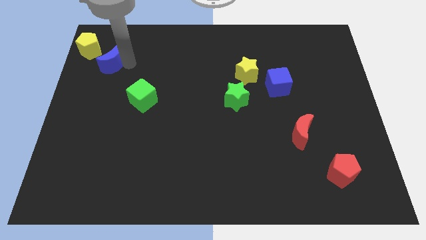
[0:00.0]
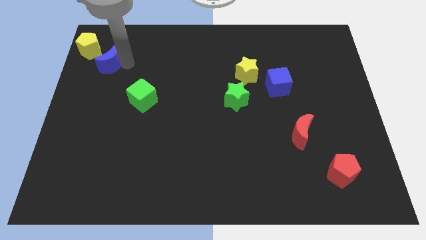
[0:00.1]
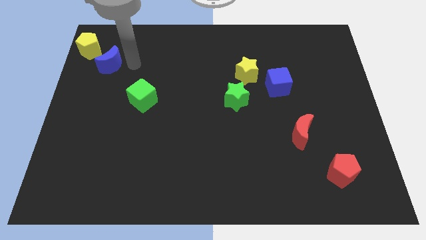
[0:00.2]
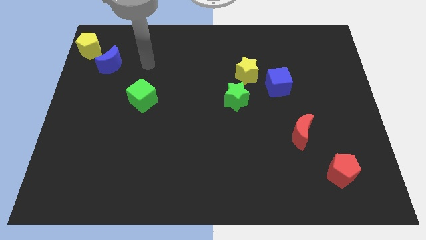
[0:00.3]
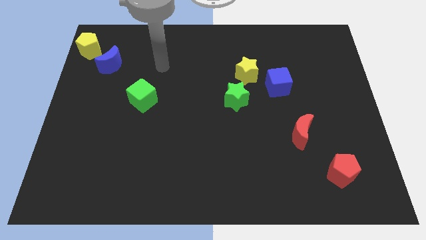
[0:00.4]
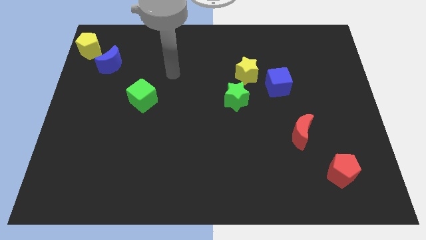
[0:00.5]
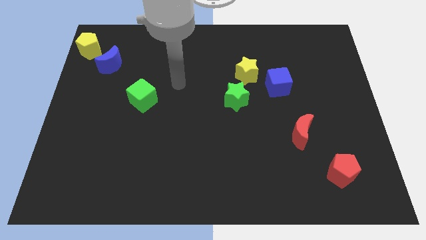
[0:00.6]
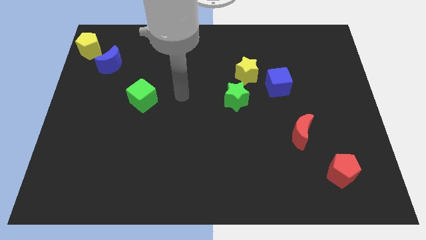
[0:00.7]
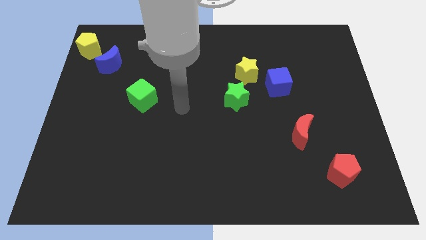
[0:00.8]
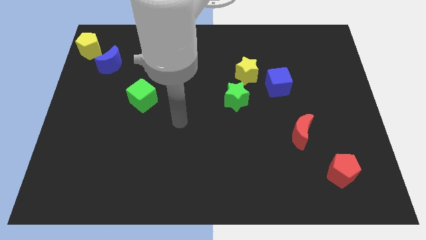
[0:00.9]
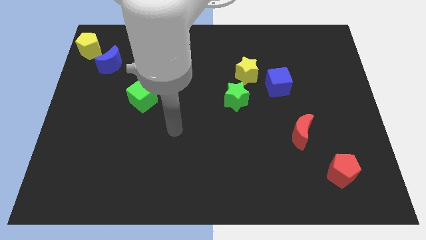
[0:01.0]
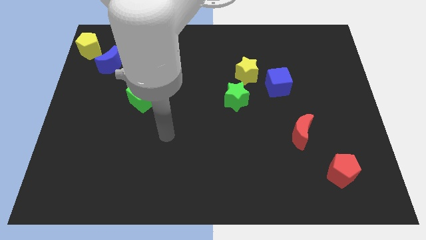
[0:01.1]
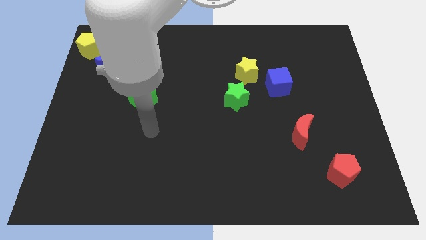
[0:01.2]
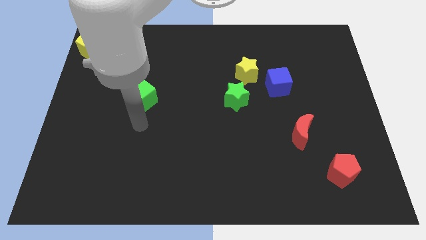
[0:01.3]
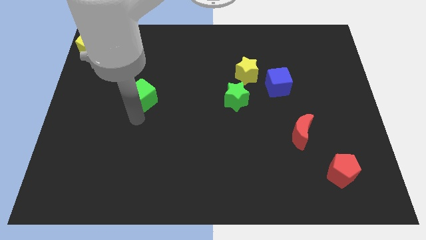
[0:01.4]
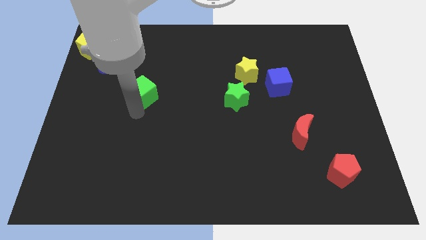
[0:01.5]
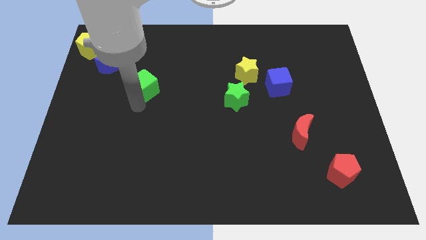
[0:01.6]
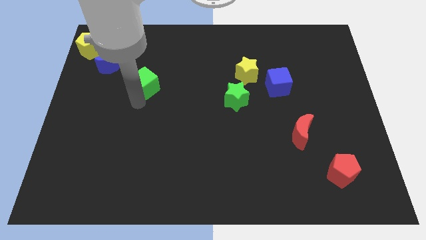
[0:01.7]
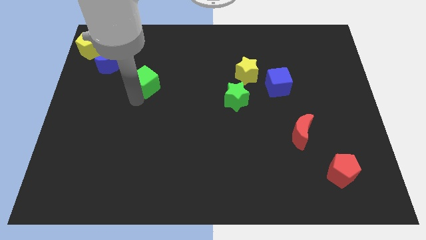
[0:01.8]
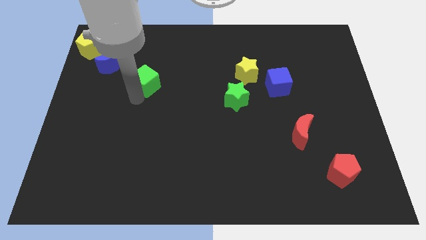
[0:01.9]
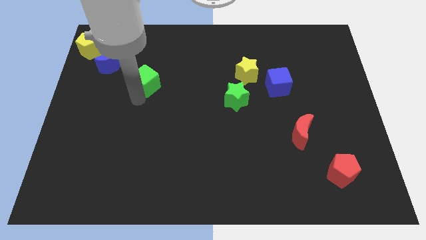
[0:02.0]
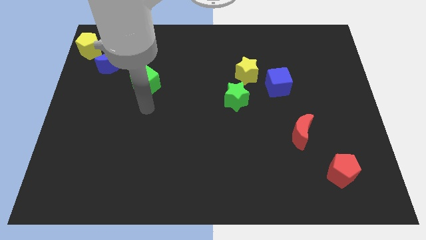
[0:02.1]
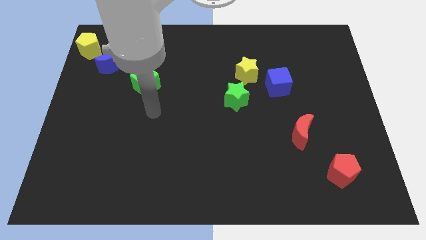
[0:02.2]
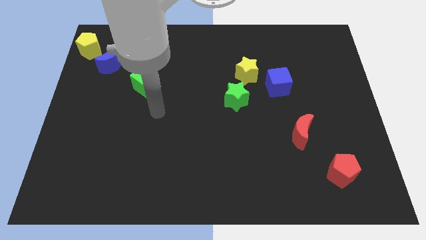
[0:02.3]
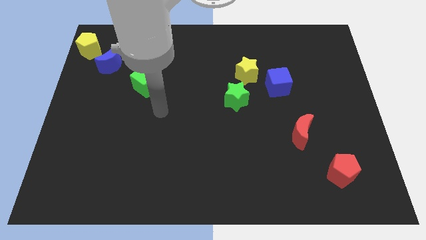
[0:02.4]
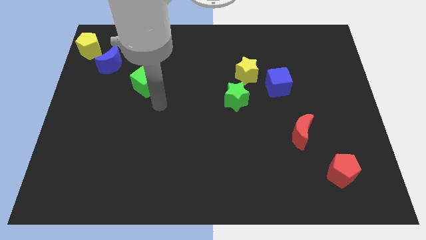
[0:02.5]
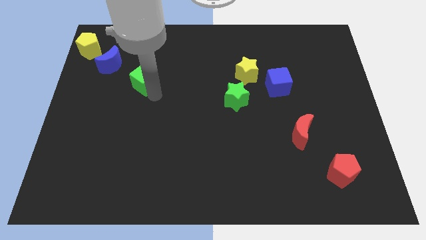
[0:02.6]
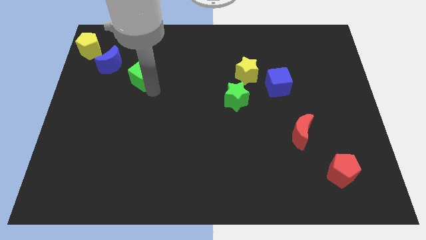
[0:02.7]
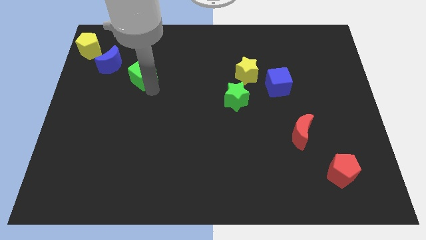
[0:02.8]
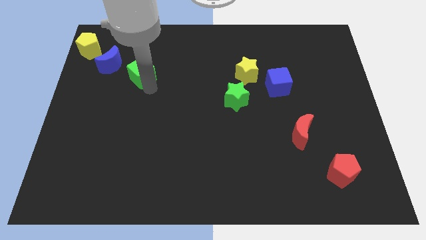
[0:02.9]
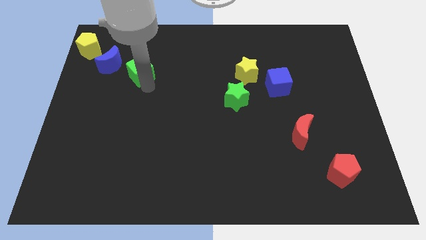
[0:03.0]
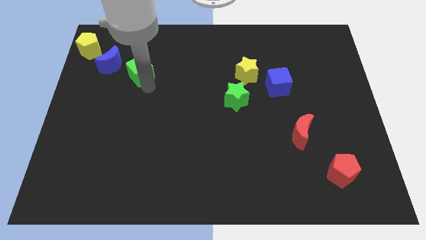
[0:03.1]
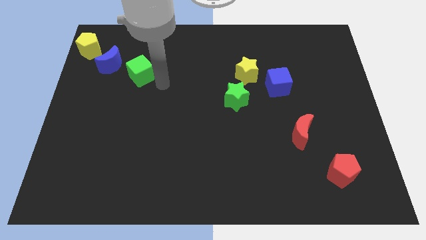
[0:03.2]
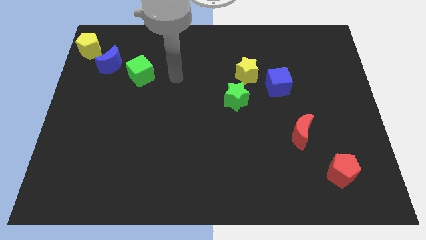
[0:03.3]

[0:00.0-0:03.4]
place the green cube bottom right to the blue moon

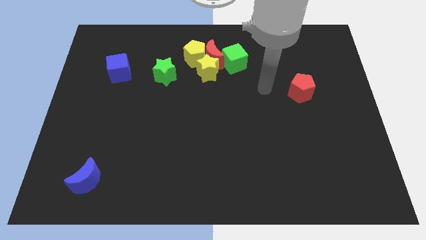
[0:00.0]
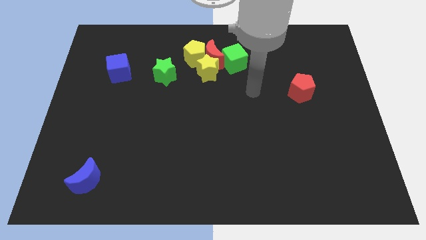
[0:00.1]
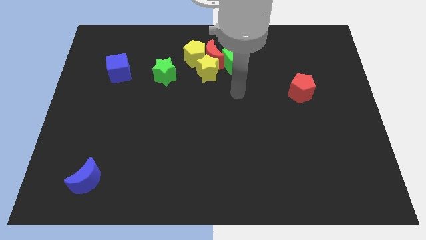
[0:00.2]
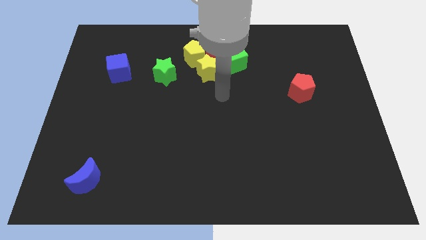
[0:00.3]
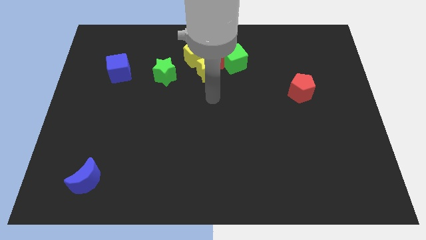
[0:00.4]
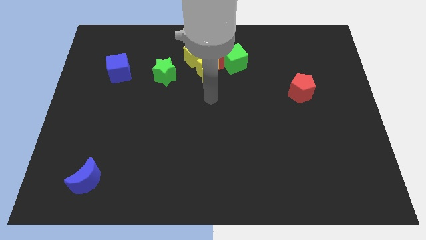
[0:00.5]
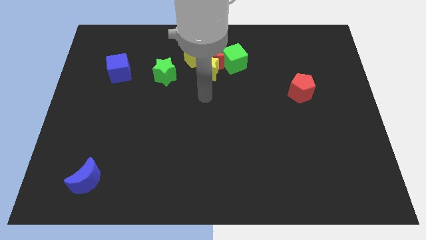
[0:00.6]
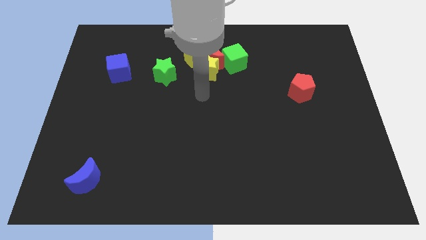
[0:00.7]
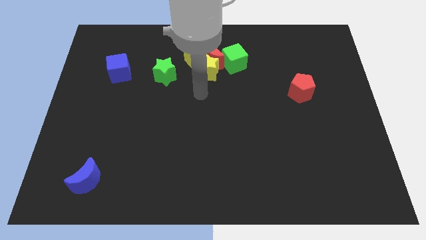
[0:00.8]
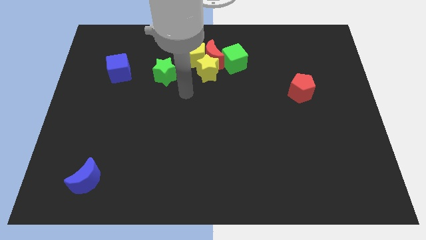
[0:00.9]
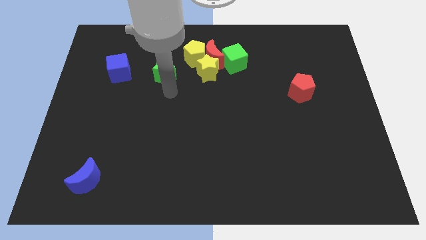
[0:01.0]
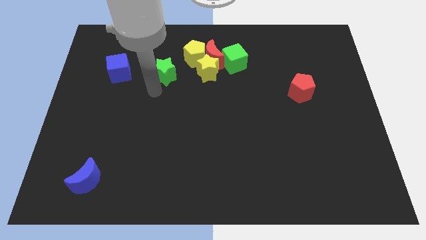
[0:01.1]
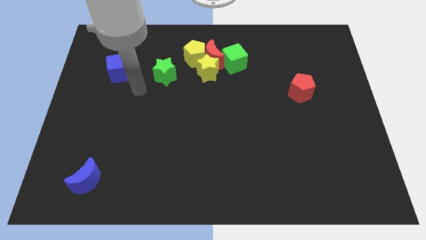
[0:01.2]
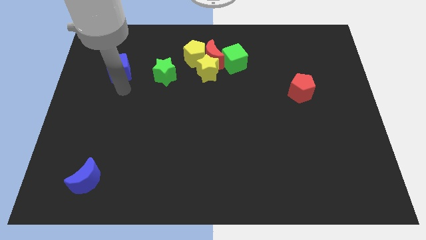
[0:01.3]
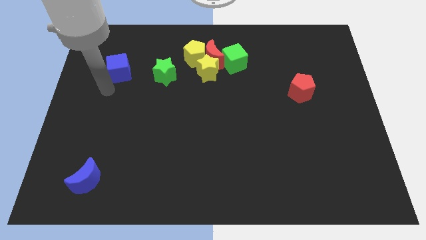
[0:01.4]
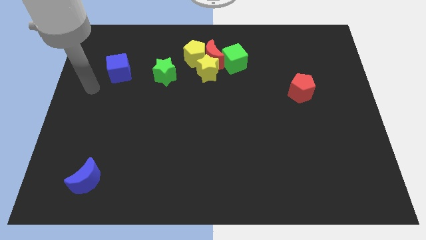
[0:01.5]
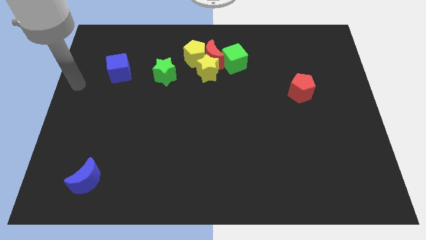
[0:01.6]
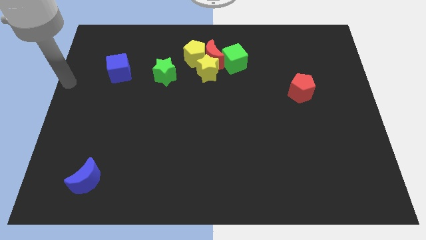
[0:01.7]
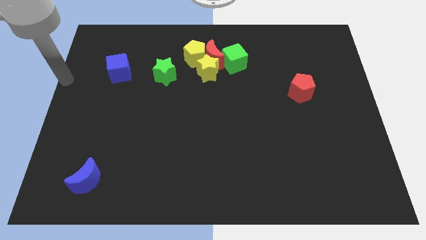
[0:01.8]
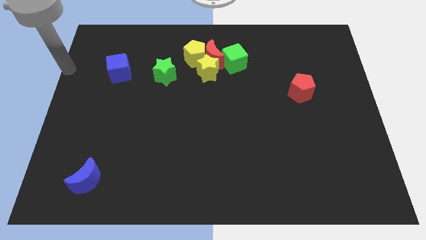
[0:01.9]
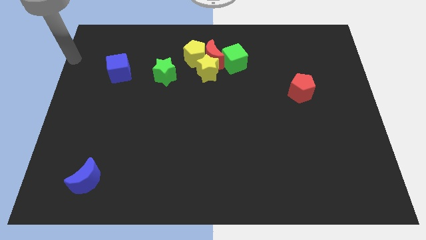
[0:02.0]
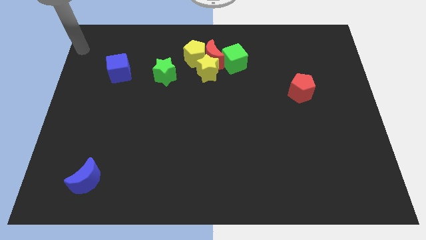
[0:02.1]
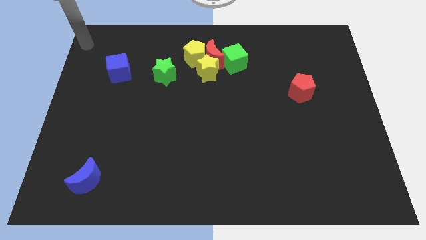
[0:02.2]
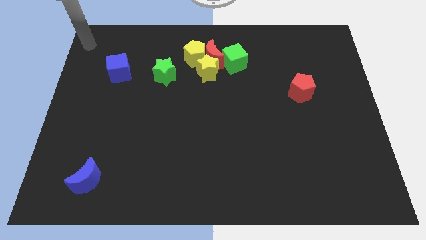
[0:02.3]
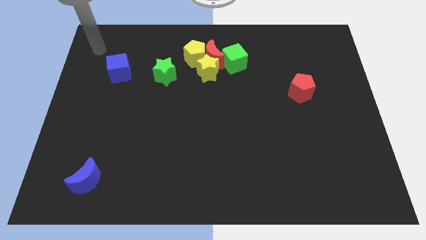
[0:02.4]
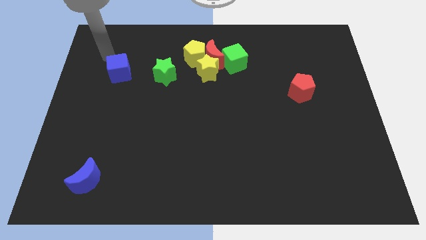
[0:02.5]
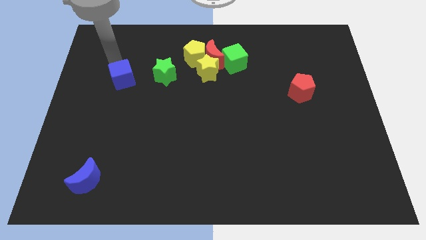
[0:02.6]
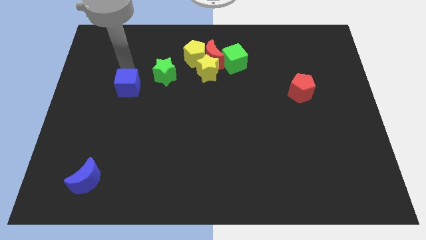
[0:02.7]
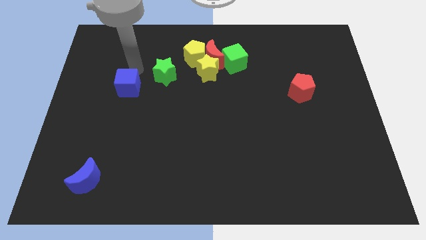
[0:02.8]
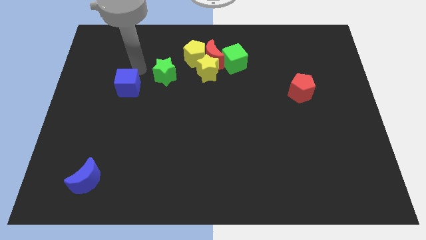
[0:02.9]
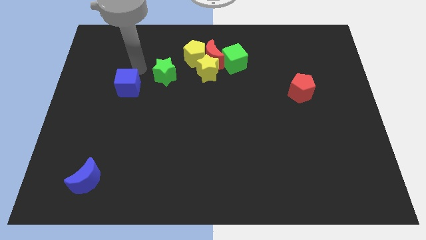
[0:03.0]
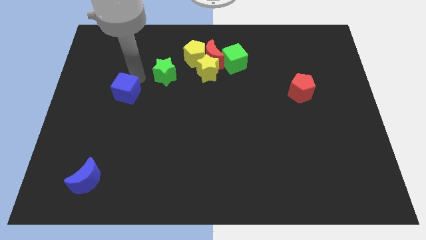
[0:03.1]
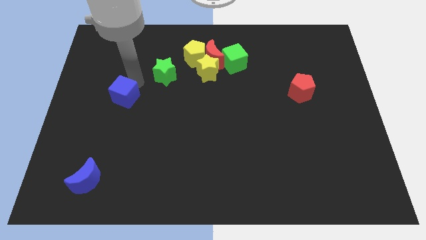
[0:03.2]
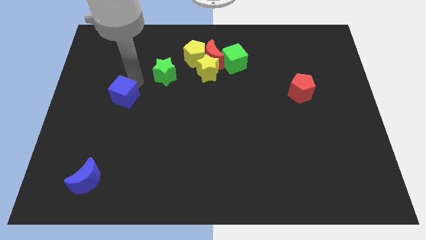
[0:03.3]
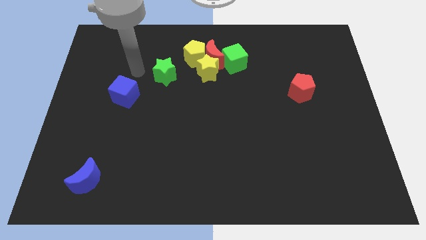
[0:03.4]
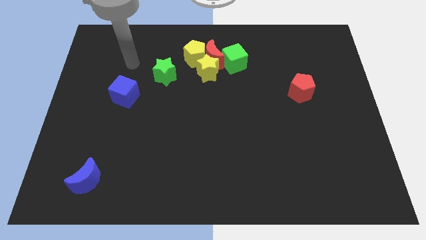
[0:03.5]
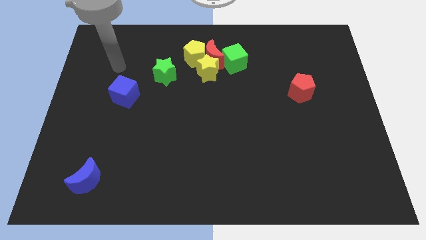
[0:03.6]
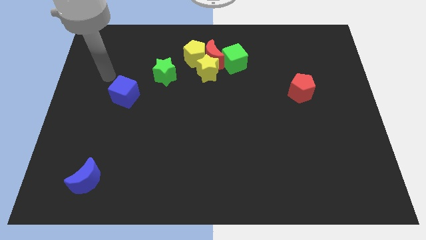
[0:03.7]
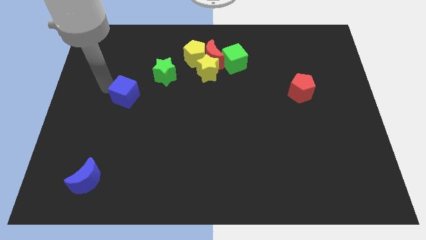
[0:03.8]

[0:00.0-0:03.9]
push the blue cube to the bottom left of the green star

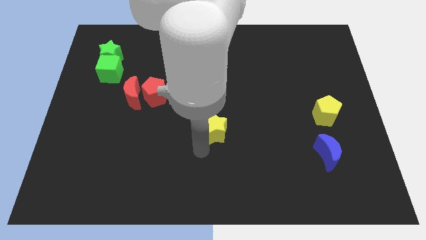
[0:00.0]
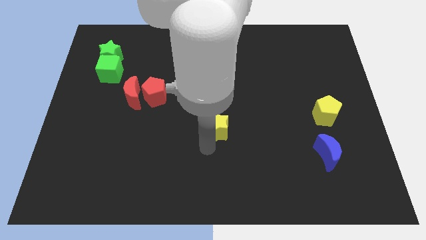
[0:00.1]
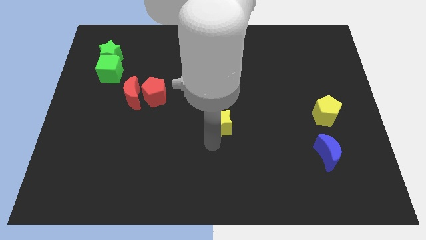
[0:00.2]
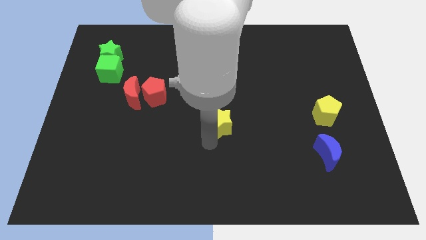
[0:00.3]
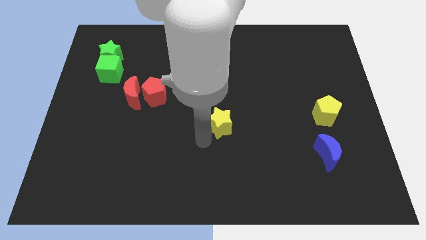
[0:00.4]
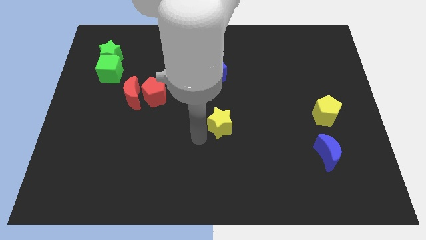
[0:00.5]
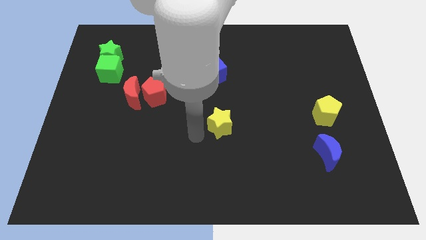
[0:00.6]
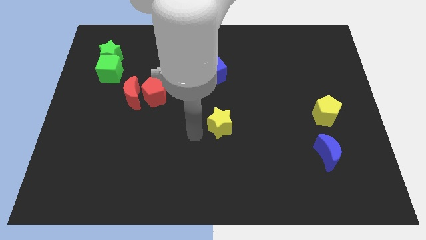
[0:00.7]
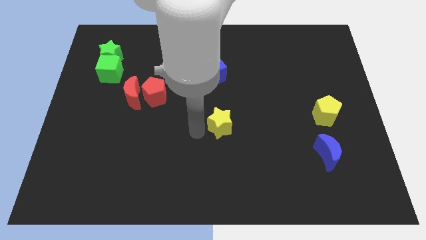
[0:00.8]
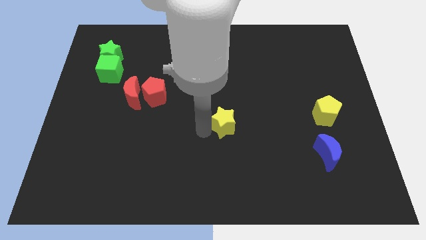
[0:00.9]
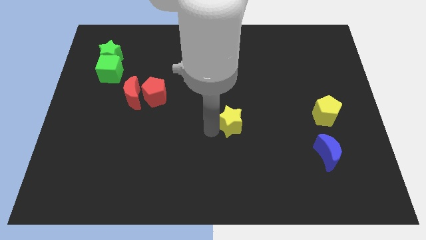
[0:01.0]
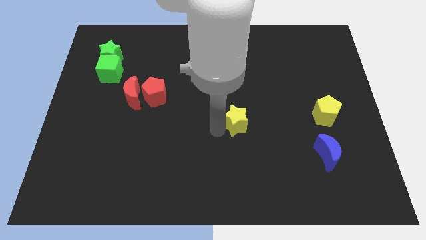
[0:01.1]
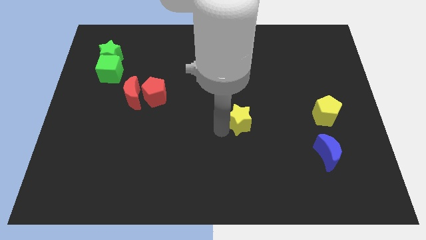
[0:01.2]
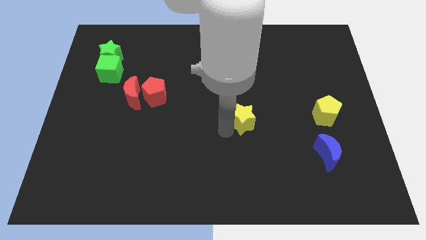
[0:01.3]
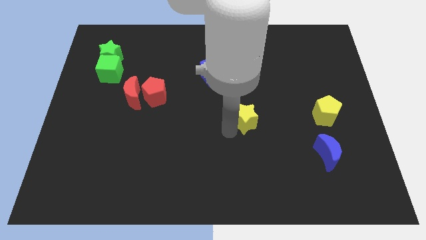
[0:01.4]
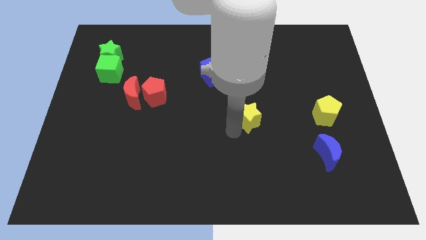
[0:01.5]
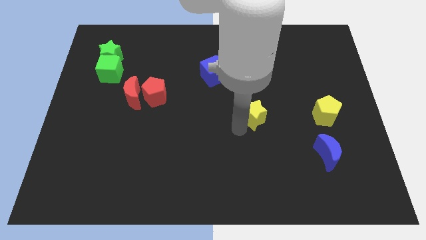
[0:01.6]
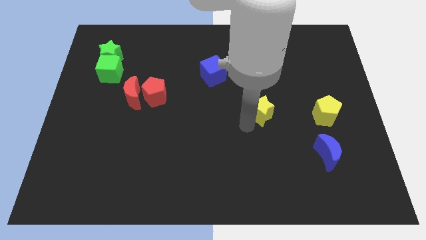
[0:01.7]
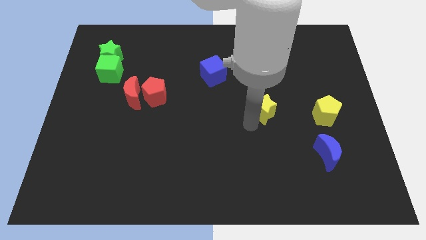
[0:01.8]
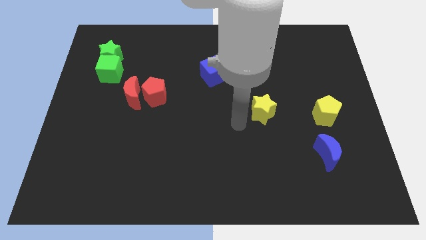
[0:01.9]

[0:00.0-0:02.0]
move the yellow star diagonal to the blue moon
